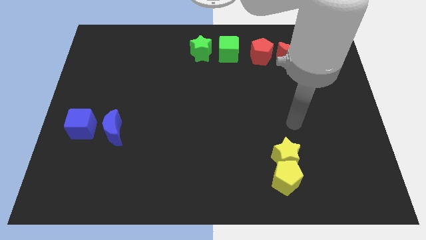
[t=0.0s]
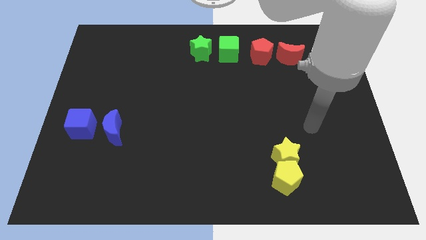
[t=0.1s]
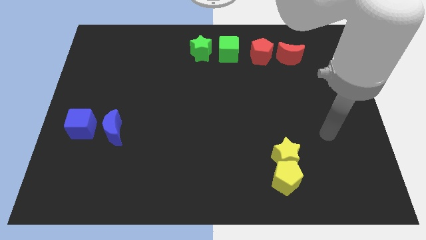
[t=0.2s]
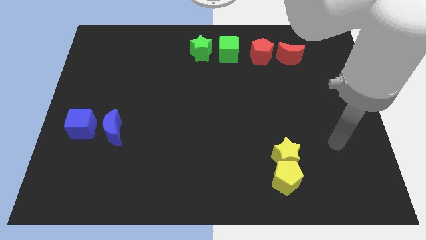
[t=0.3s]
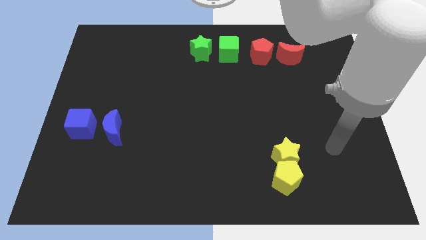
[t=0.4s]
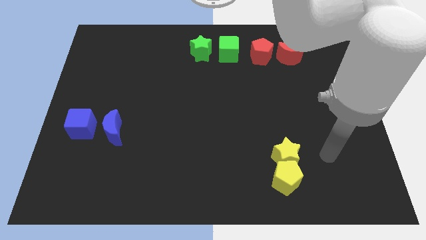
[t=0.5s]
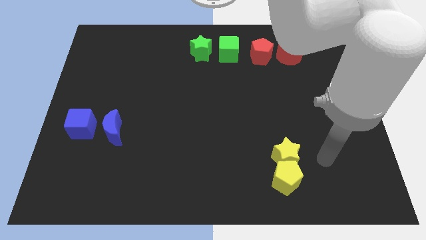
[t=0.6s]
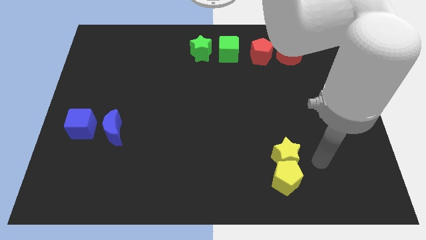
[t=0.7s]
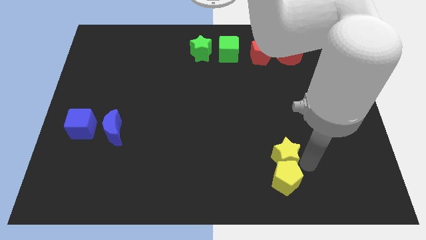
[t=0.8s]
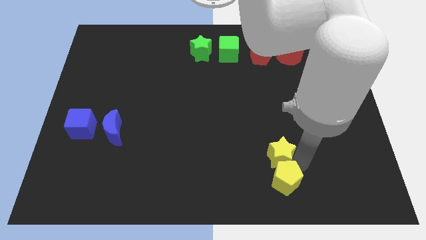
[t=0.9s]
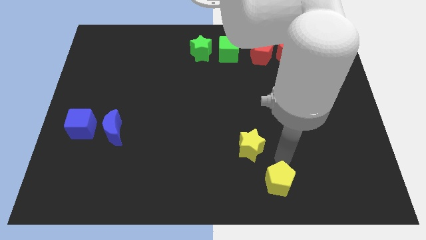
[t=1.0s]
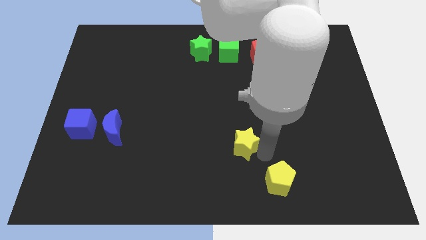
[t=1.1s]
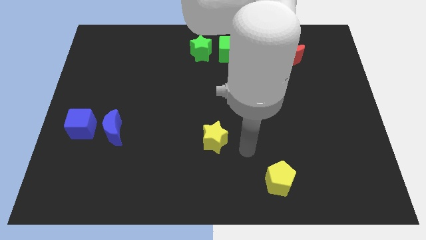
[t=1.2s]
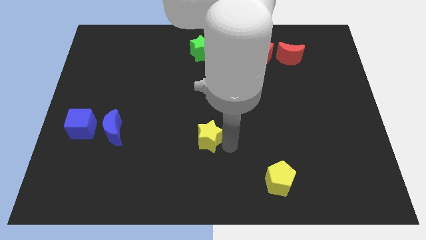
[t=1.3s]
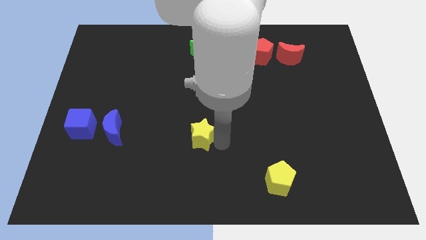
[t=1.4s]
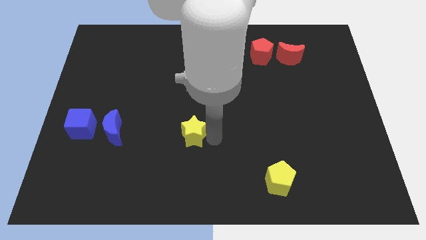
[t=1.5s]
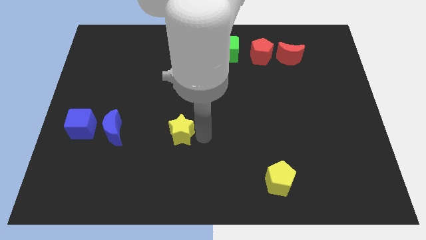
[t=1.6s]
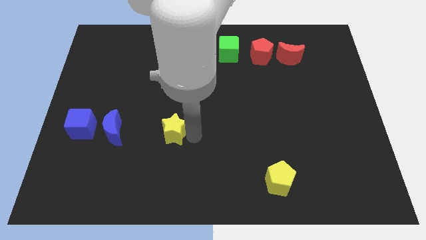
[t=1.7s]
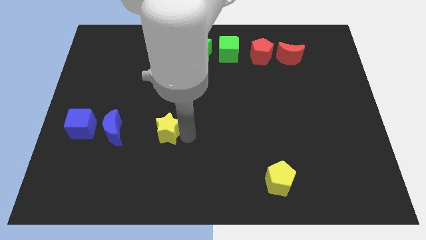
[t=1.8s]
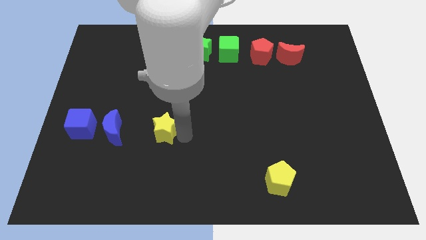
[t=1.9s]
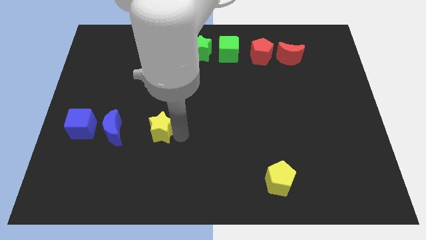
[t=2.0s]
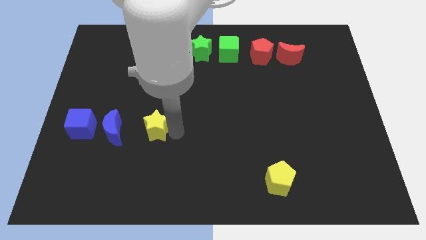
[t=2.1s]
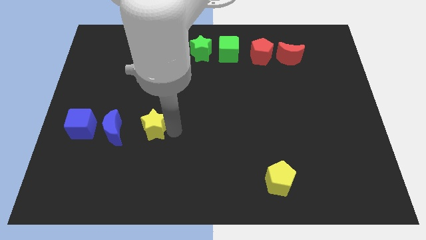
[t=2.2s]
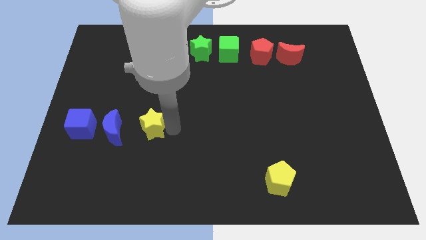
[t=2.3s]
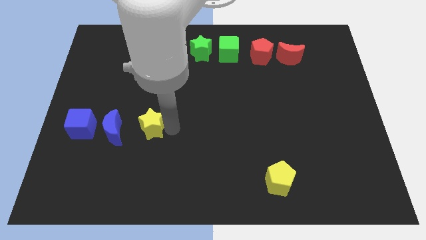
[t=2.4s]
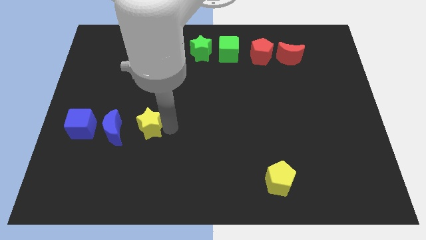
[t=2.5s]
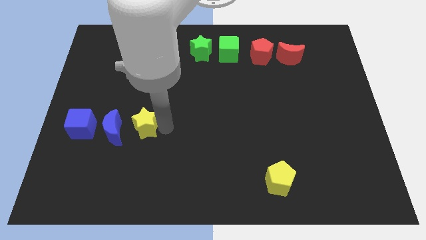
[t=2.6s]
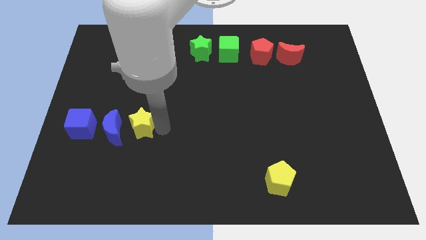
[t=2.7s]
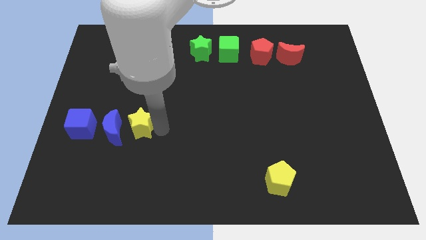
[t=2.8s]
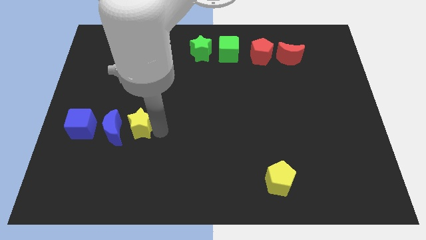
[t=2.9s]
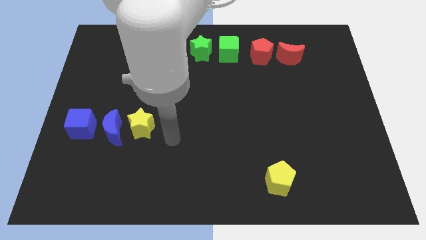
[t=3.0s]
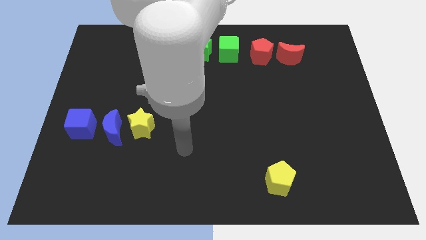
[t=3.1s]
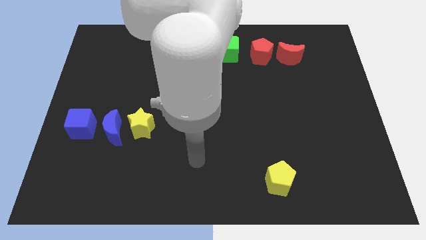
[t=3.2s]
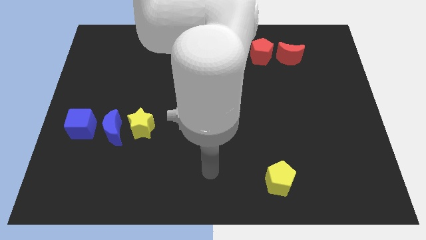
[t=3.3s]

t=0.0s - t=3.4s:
place the yellow star to the right side of the blue moon

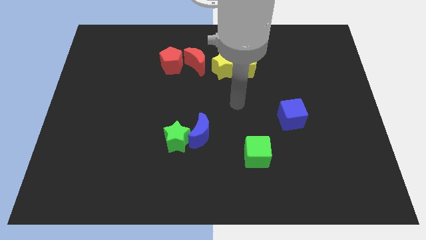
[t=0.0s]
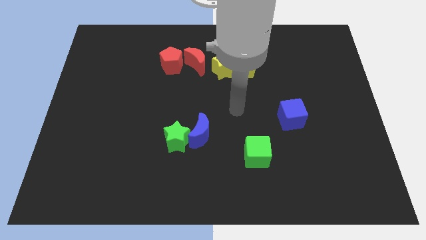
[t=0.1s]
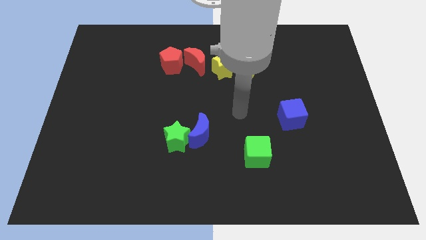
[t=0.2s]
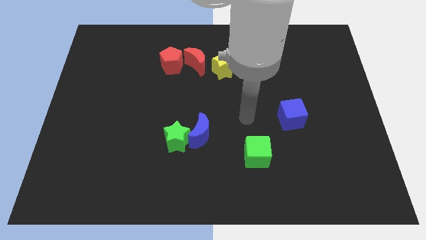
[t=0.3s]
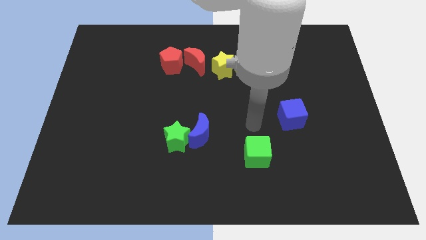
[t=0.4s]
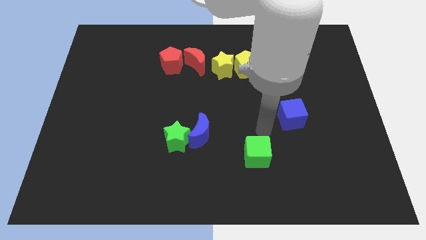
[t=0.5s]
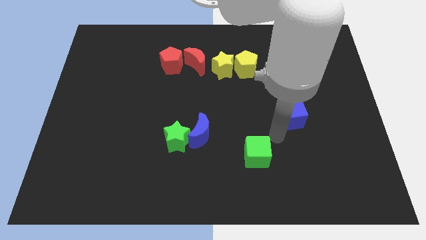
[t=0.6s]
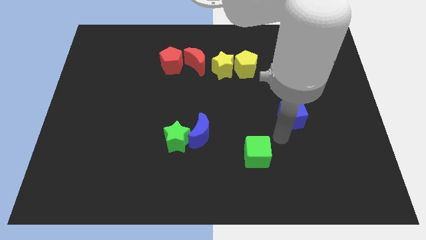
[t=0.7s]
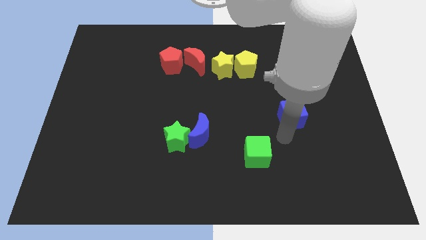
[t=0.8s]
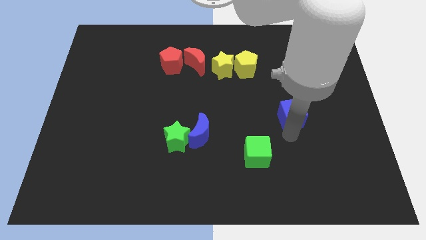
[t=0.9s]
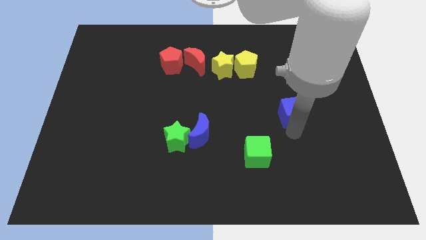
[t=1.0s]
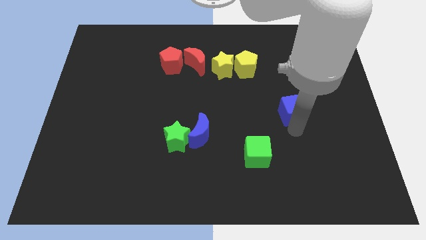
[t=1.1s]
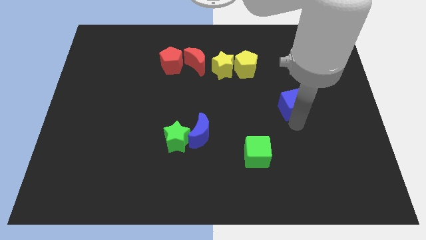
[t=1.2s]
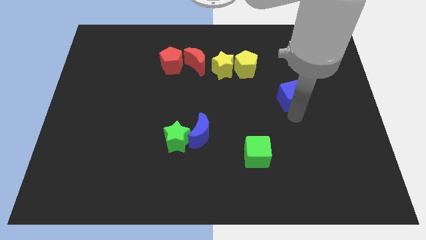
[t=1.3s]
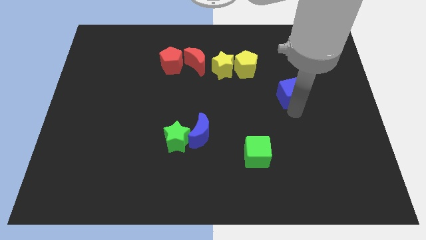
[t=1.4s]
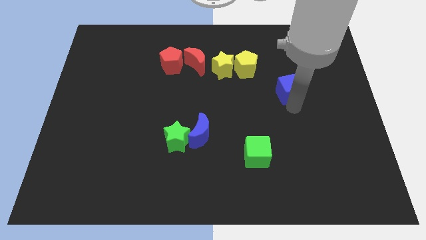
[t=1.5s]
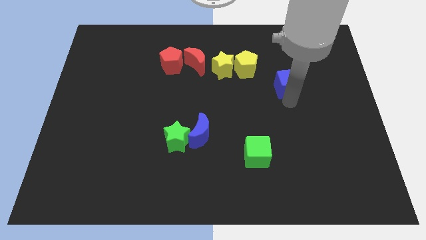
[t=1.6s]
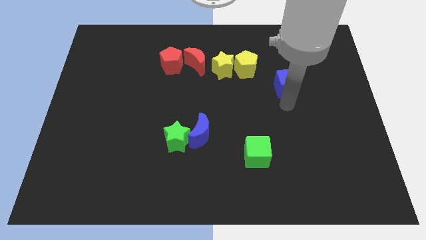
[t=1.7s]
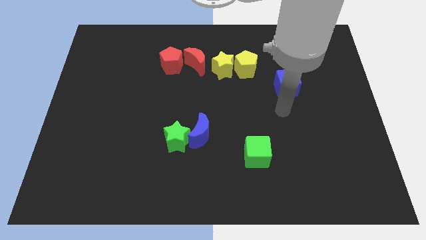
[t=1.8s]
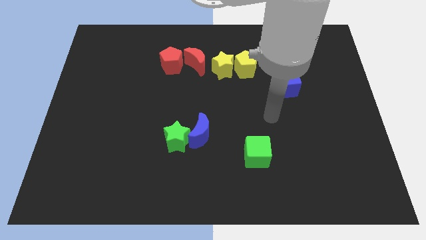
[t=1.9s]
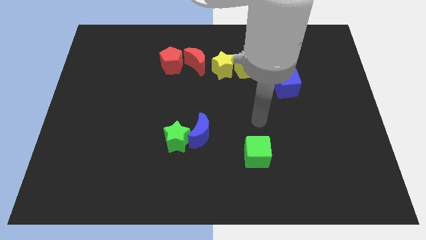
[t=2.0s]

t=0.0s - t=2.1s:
move blue cube towards yellow pentgaon

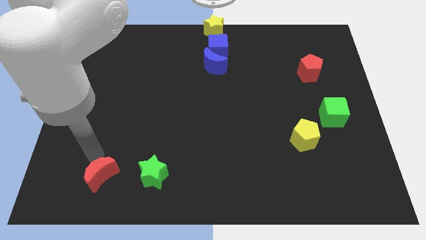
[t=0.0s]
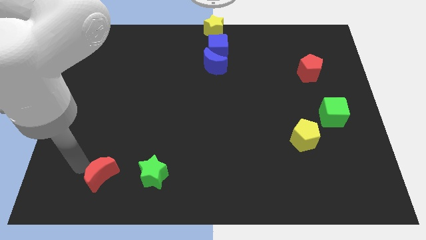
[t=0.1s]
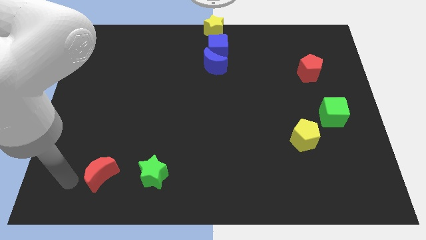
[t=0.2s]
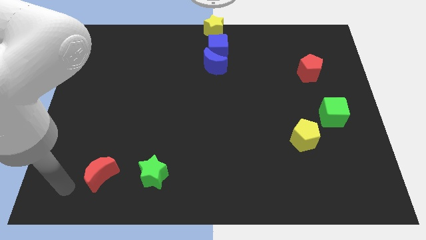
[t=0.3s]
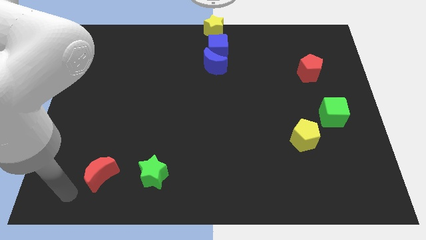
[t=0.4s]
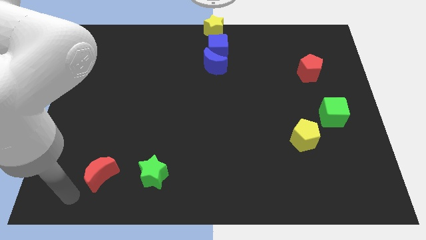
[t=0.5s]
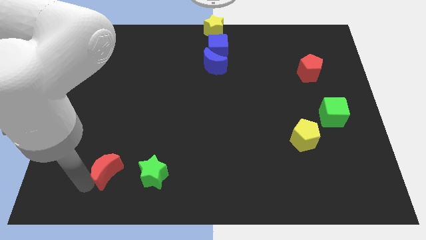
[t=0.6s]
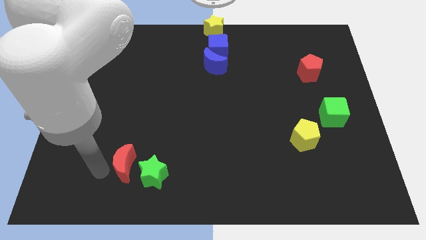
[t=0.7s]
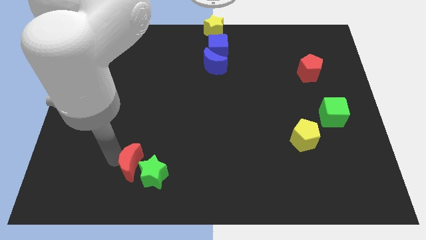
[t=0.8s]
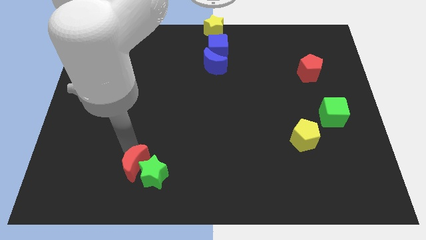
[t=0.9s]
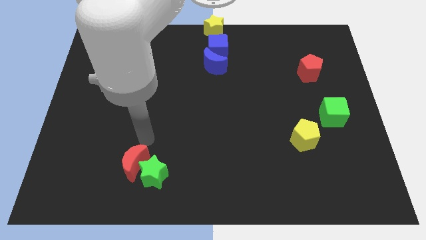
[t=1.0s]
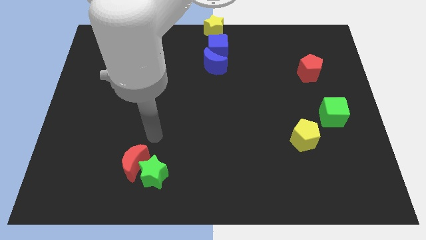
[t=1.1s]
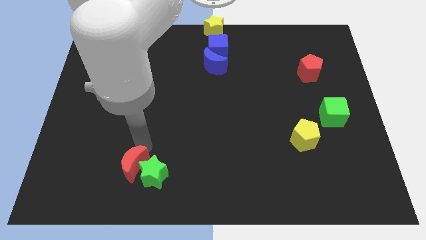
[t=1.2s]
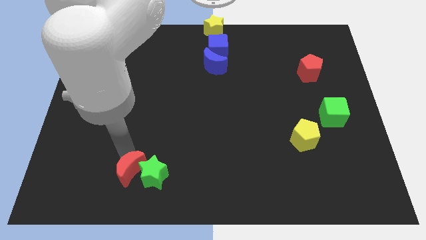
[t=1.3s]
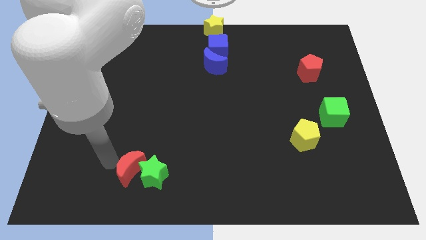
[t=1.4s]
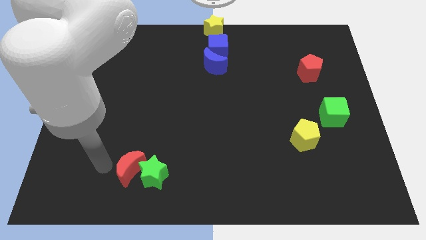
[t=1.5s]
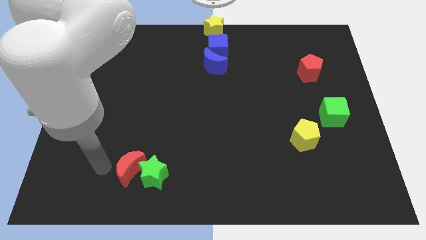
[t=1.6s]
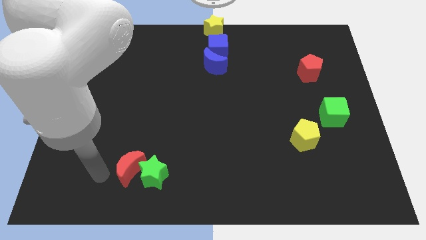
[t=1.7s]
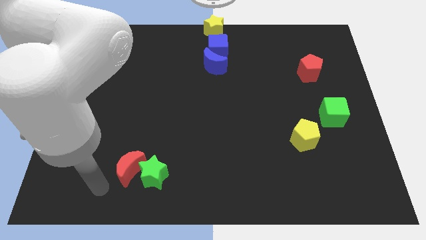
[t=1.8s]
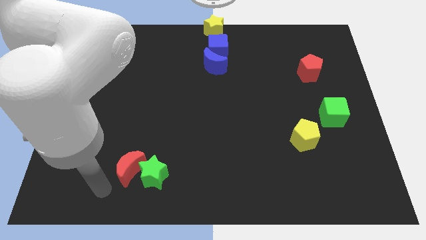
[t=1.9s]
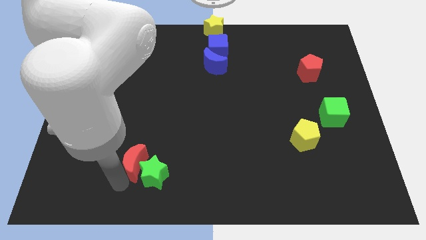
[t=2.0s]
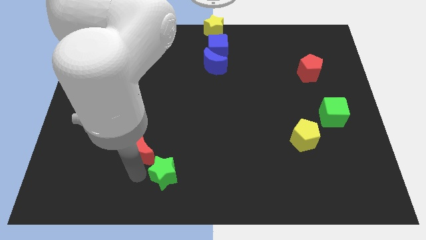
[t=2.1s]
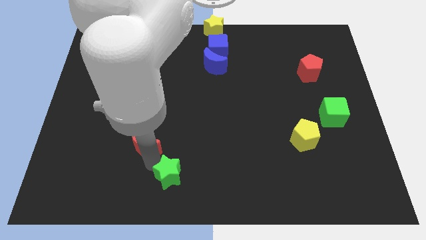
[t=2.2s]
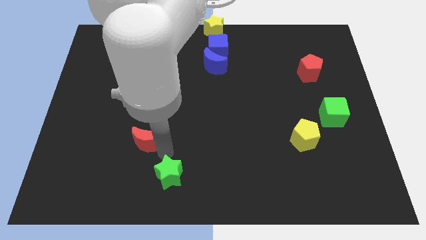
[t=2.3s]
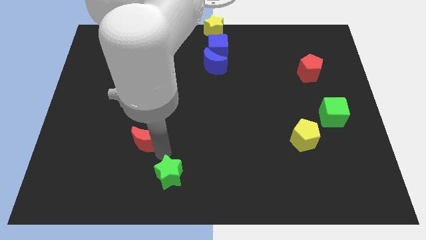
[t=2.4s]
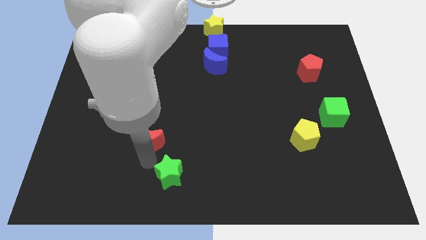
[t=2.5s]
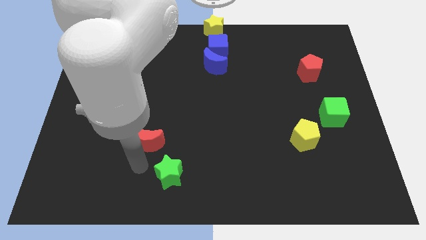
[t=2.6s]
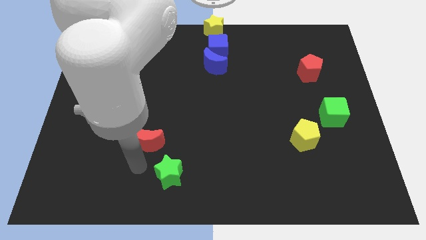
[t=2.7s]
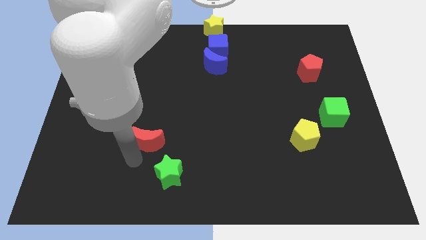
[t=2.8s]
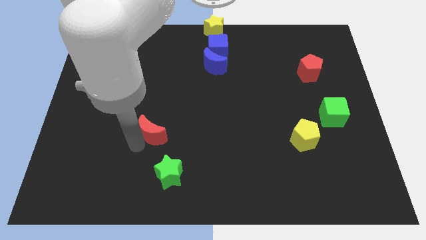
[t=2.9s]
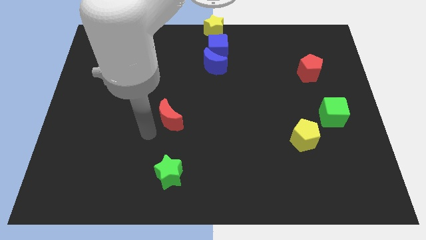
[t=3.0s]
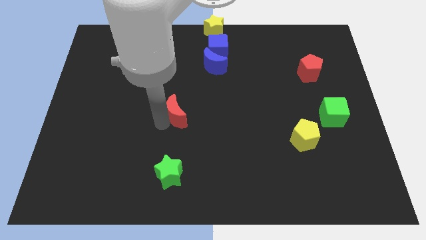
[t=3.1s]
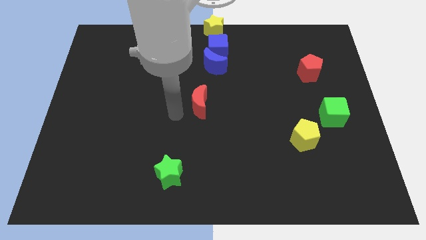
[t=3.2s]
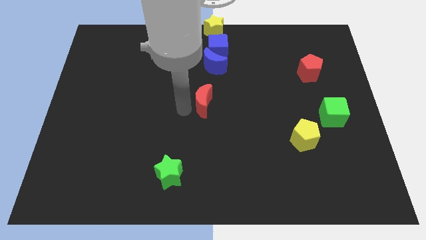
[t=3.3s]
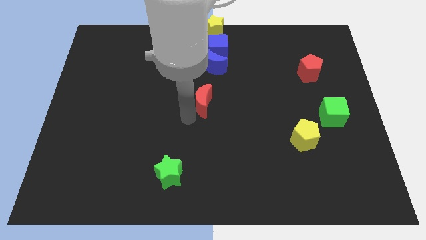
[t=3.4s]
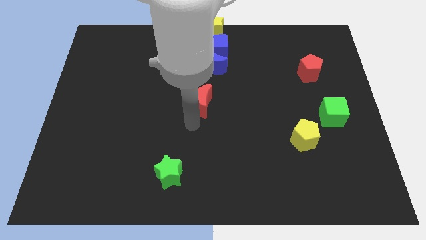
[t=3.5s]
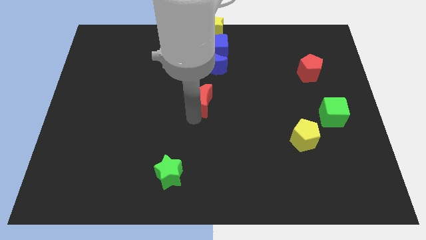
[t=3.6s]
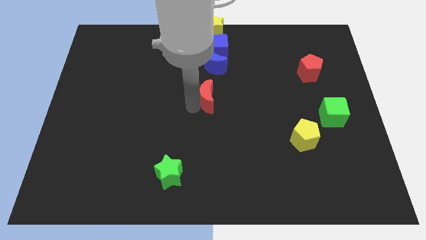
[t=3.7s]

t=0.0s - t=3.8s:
push the red moon to the center of the board
